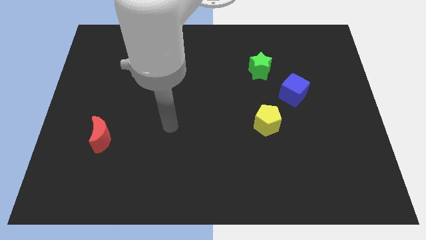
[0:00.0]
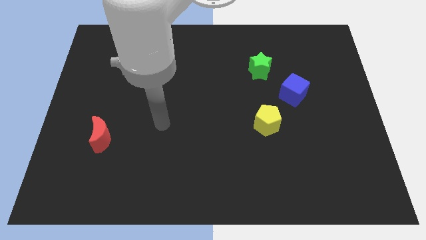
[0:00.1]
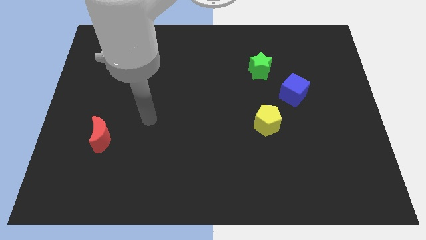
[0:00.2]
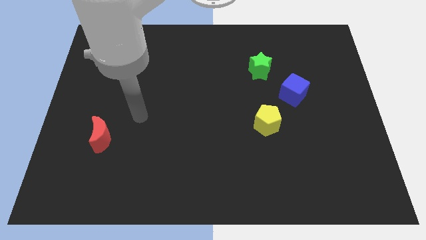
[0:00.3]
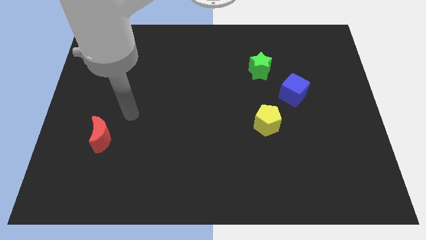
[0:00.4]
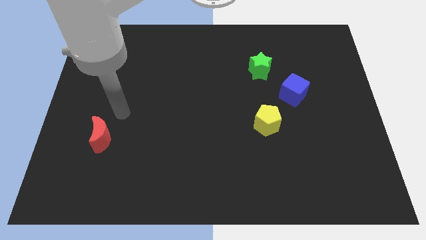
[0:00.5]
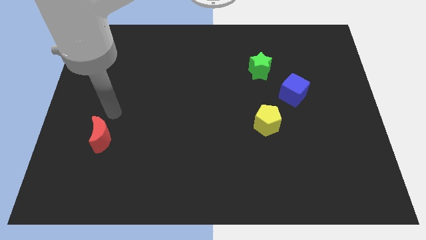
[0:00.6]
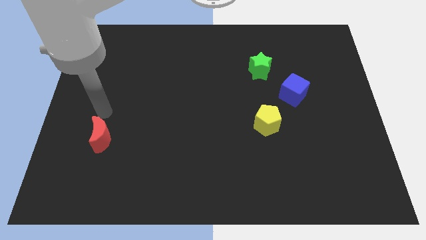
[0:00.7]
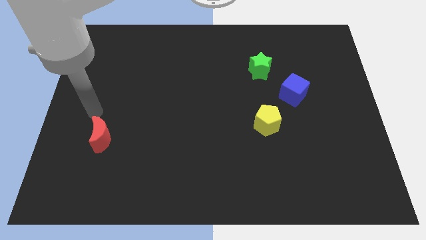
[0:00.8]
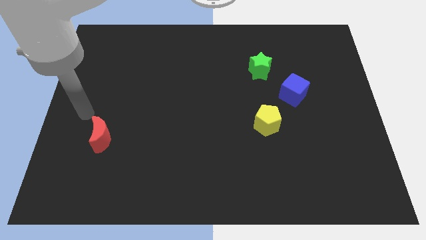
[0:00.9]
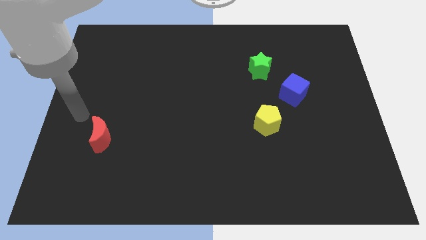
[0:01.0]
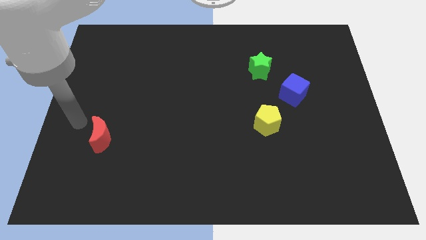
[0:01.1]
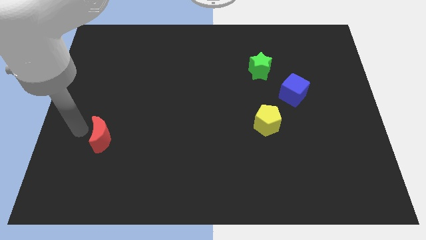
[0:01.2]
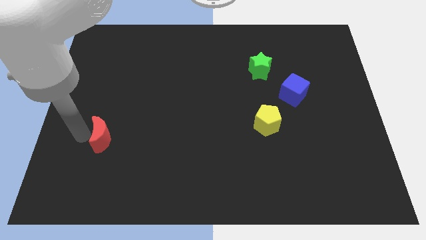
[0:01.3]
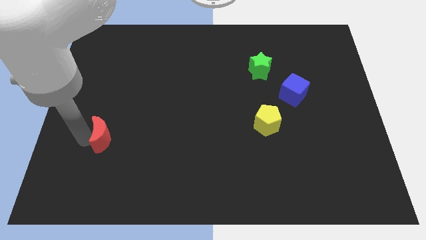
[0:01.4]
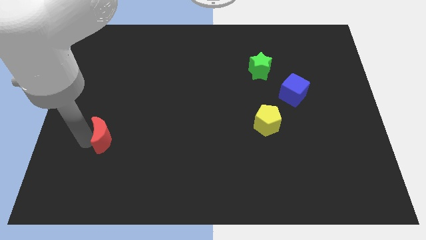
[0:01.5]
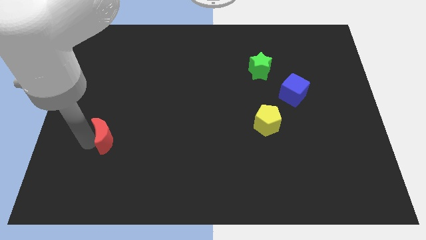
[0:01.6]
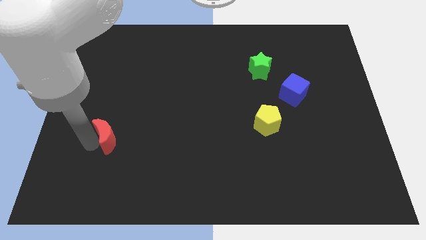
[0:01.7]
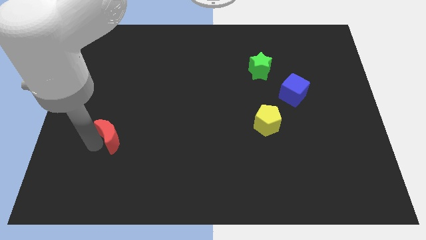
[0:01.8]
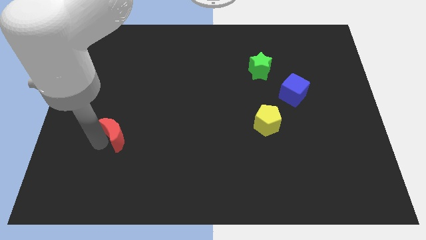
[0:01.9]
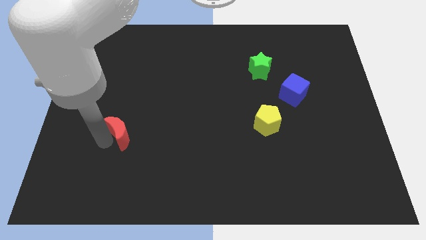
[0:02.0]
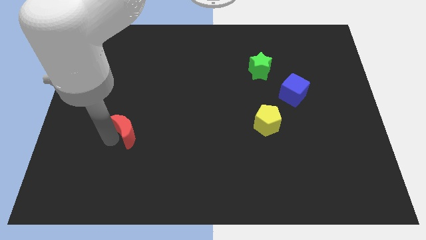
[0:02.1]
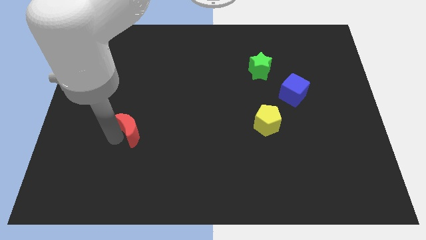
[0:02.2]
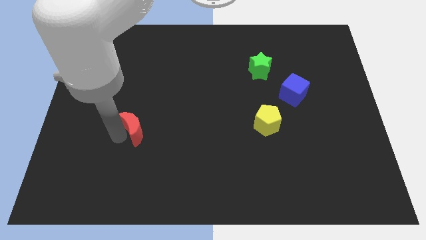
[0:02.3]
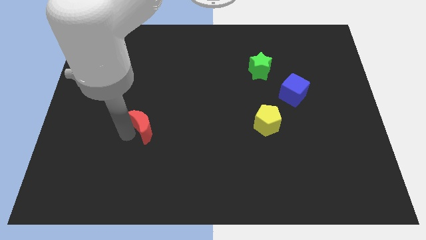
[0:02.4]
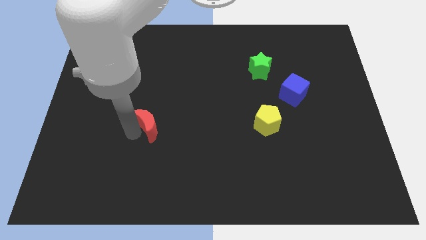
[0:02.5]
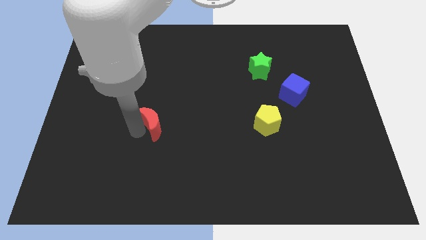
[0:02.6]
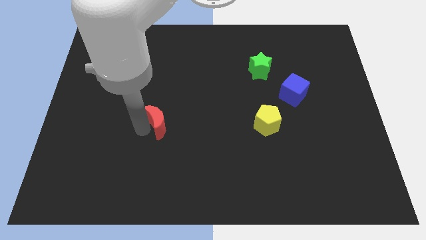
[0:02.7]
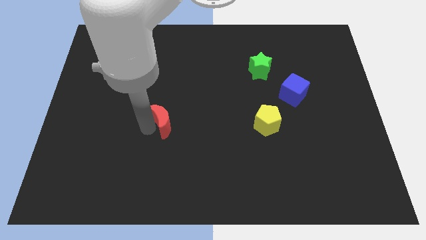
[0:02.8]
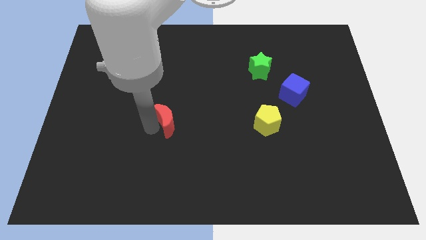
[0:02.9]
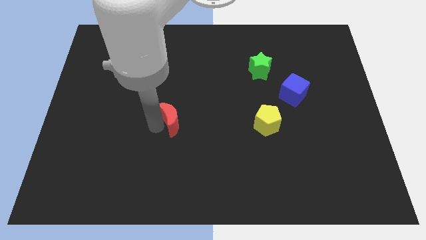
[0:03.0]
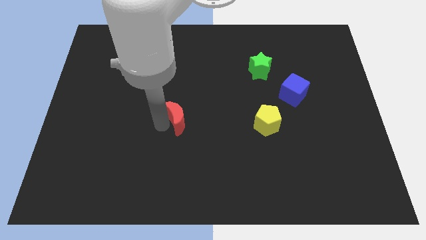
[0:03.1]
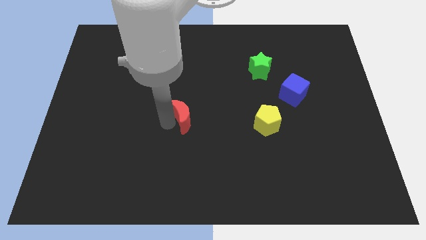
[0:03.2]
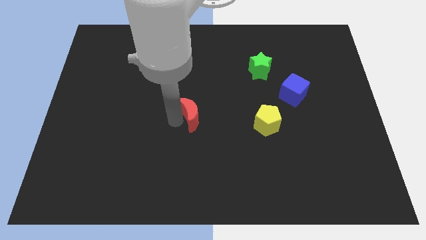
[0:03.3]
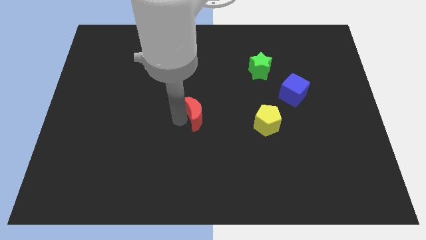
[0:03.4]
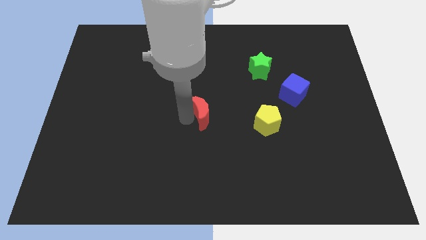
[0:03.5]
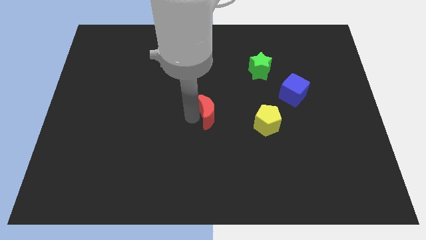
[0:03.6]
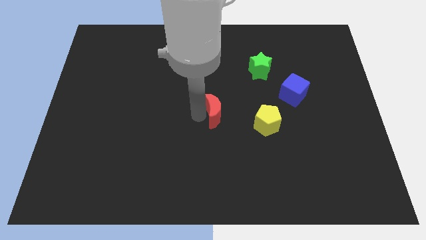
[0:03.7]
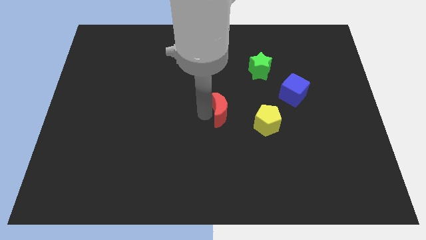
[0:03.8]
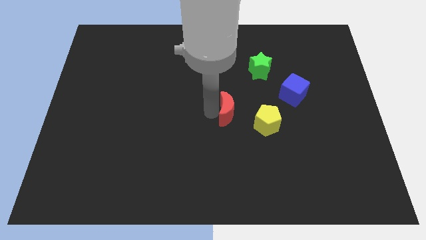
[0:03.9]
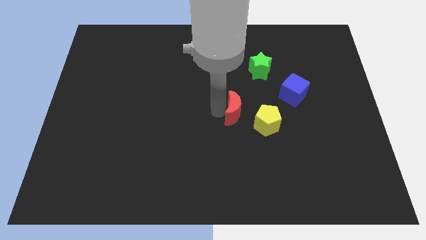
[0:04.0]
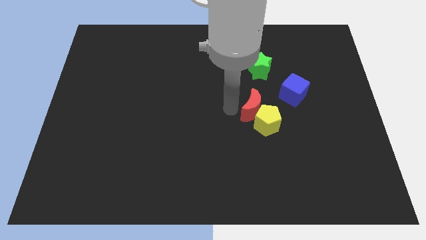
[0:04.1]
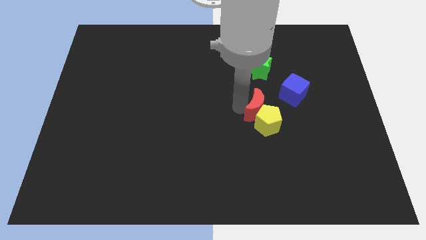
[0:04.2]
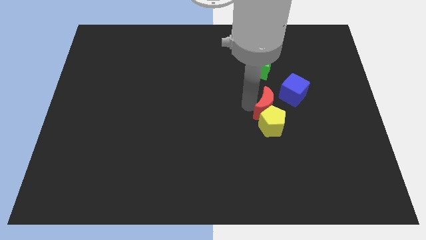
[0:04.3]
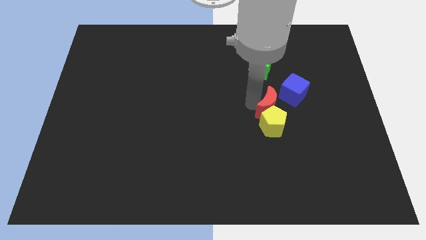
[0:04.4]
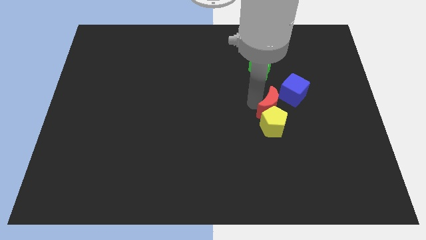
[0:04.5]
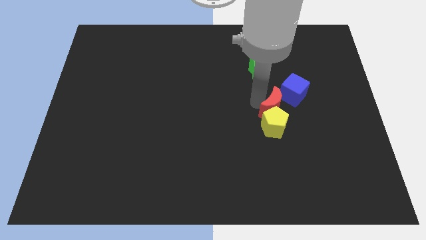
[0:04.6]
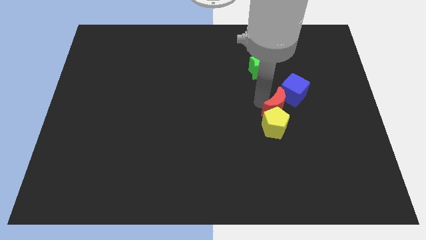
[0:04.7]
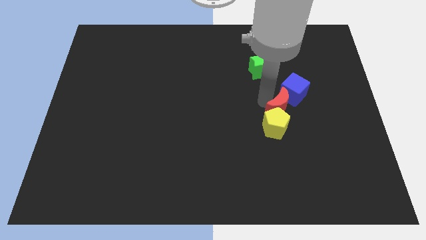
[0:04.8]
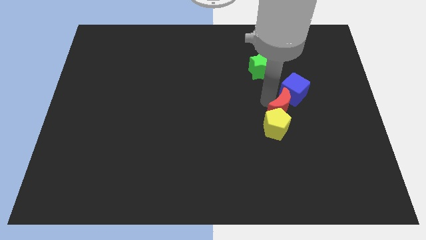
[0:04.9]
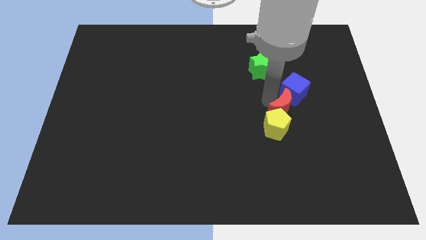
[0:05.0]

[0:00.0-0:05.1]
push the red moon close to the blue block

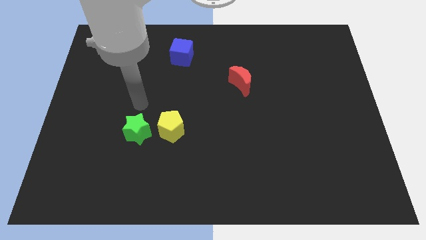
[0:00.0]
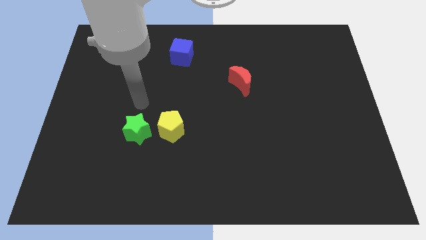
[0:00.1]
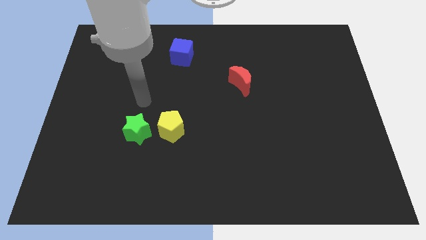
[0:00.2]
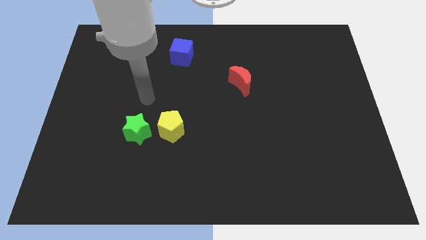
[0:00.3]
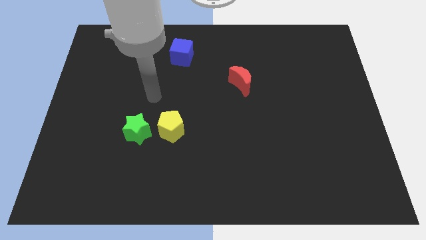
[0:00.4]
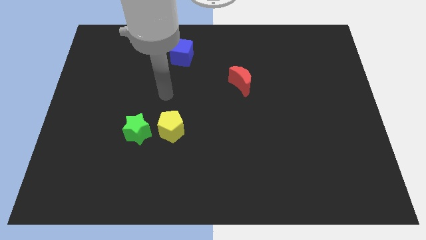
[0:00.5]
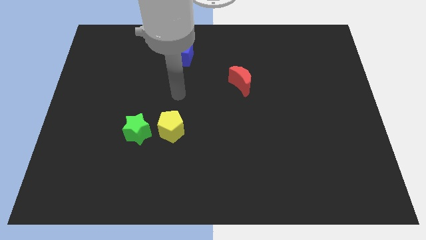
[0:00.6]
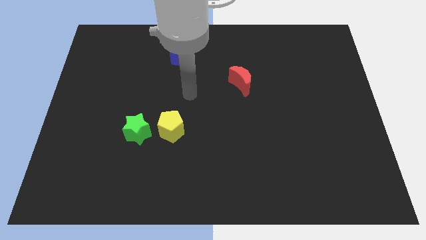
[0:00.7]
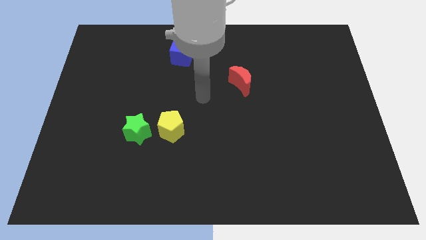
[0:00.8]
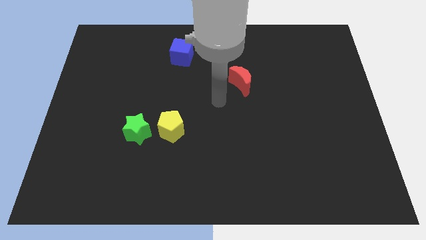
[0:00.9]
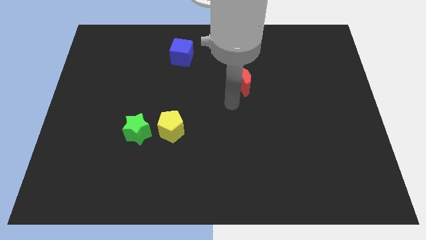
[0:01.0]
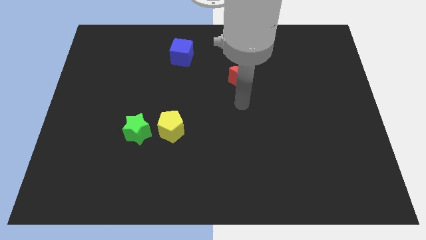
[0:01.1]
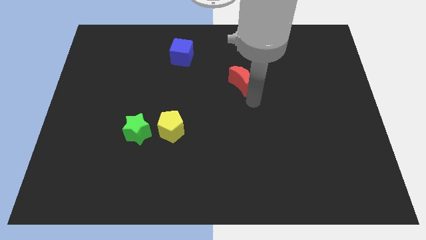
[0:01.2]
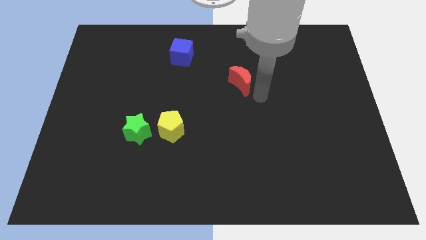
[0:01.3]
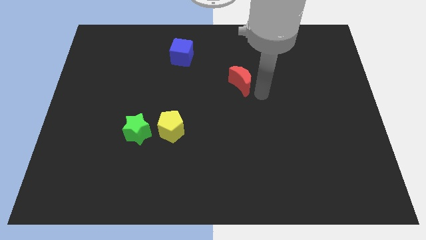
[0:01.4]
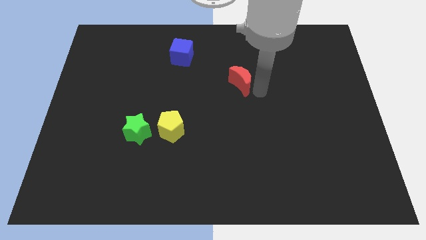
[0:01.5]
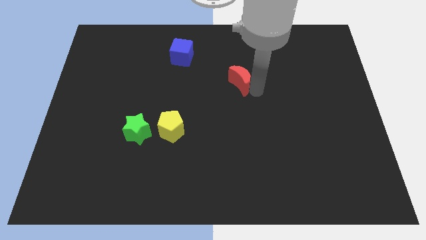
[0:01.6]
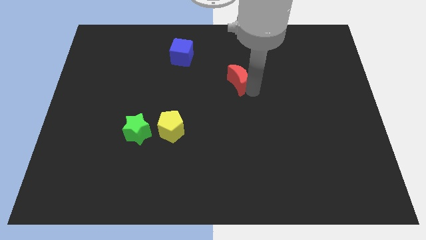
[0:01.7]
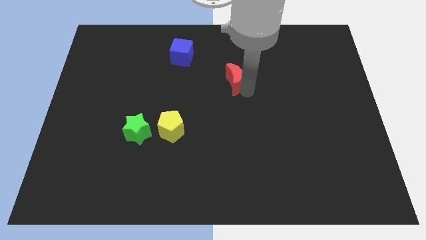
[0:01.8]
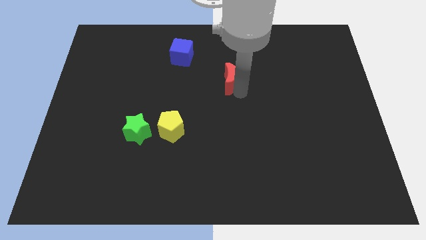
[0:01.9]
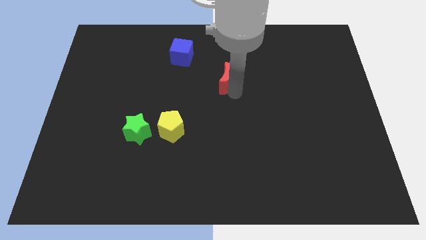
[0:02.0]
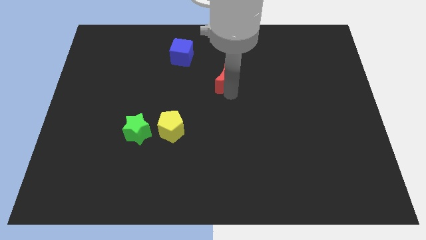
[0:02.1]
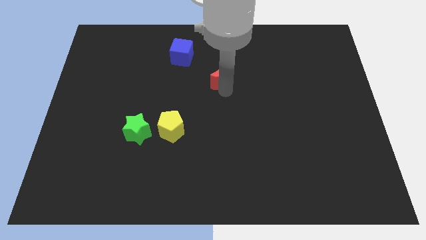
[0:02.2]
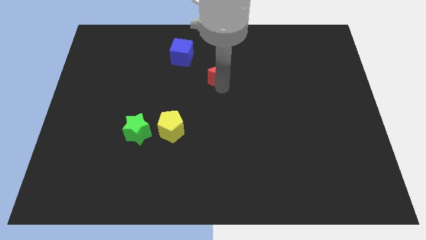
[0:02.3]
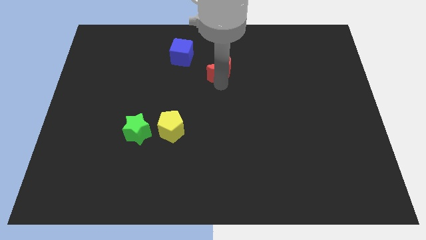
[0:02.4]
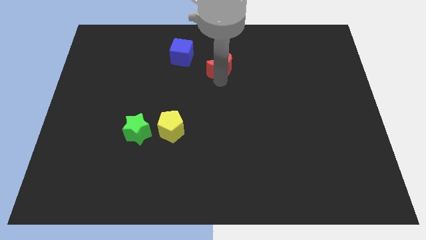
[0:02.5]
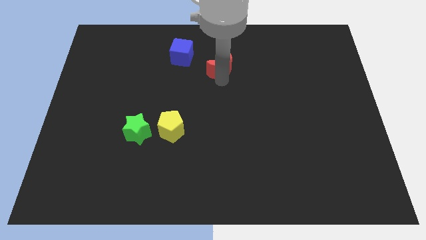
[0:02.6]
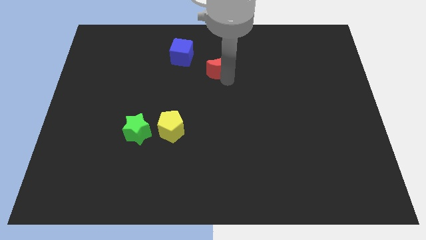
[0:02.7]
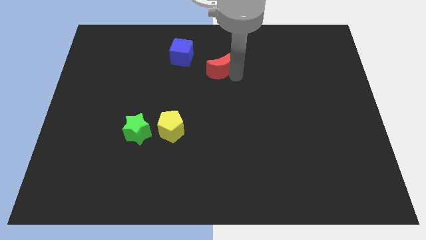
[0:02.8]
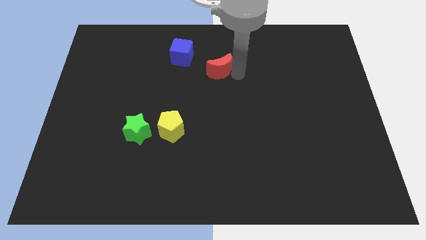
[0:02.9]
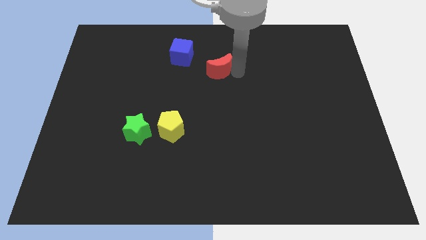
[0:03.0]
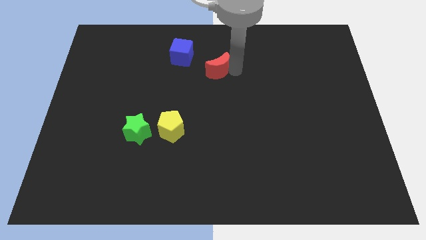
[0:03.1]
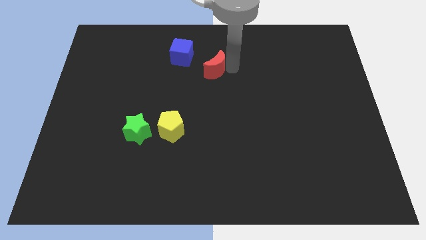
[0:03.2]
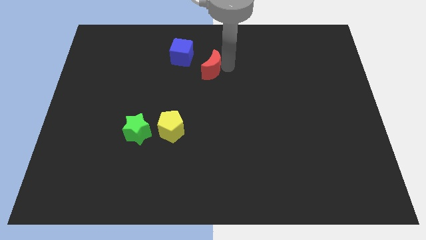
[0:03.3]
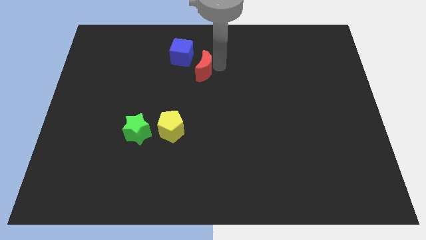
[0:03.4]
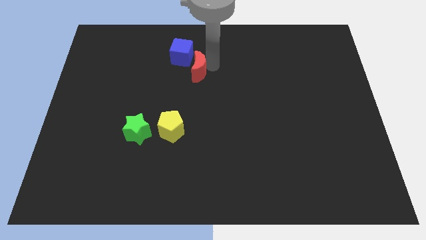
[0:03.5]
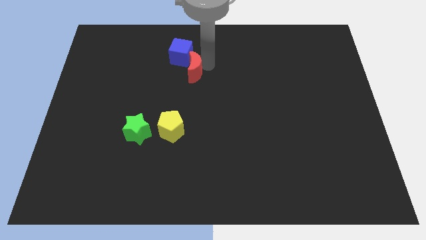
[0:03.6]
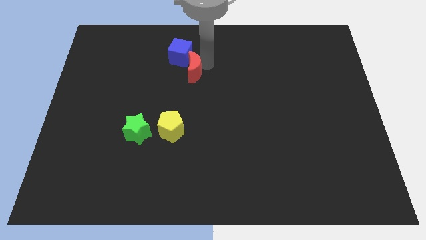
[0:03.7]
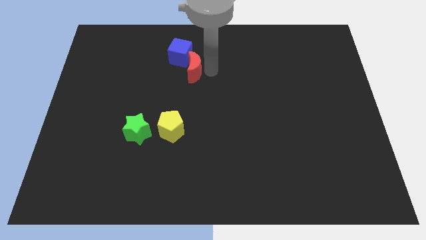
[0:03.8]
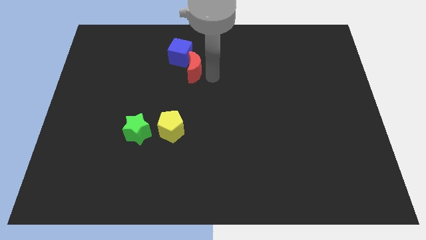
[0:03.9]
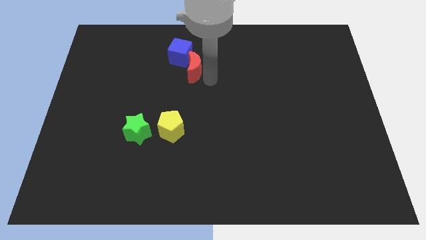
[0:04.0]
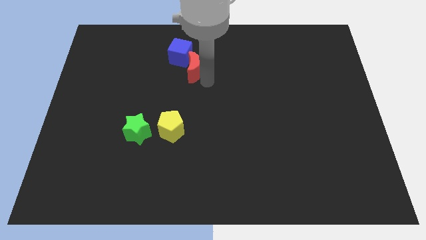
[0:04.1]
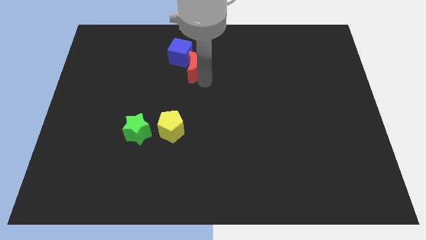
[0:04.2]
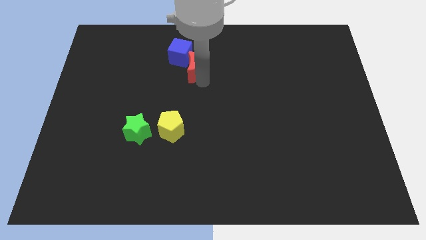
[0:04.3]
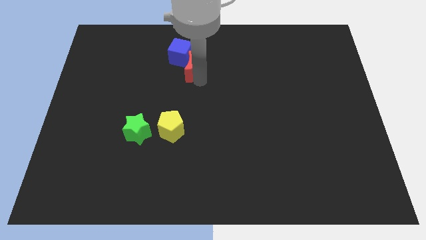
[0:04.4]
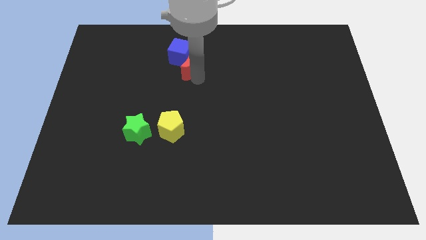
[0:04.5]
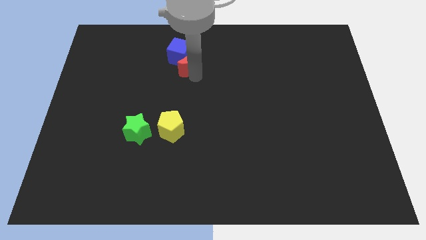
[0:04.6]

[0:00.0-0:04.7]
put the red block next to the blue cube
